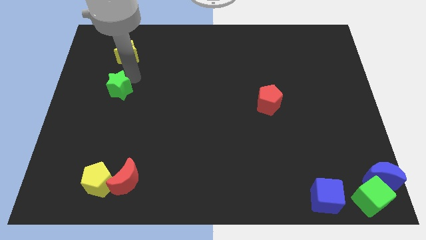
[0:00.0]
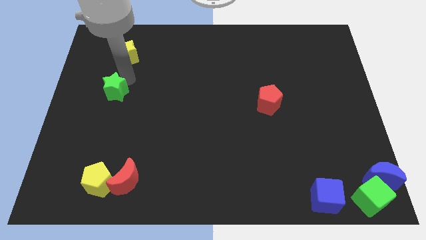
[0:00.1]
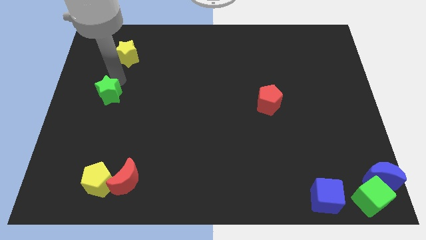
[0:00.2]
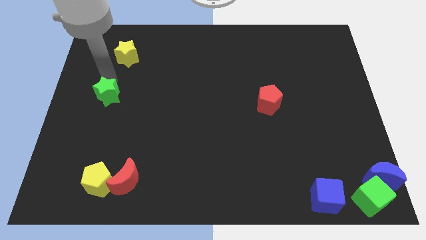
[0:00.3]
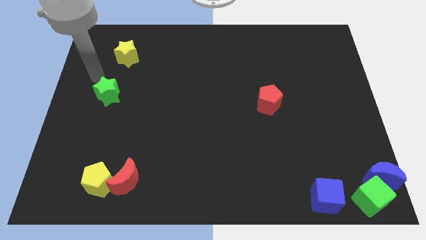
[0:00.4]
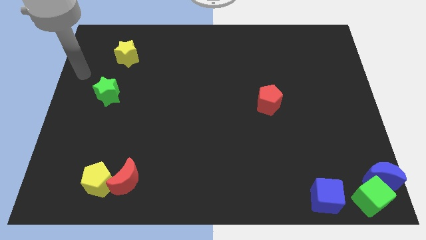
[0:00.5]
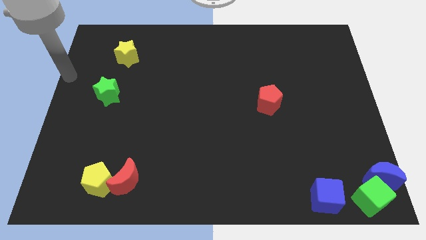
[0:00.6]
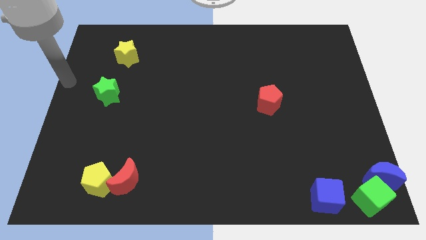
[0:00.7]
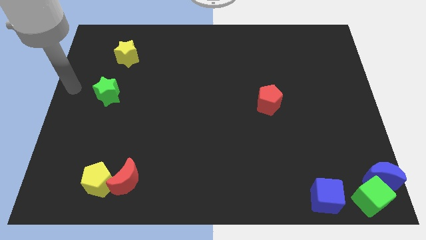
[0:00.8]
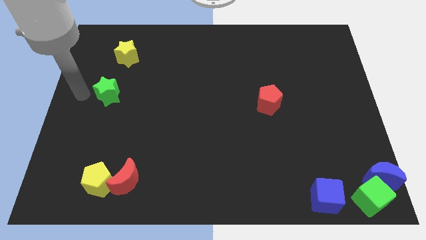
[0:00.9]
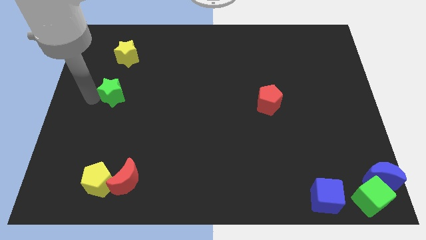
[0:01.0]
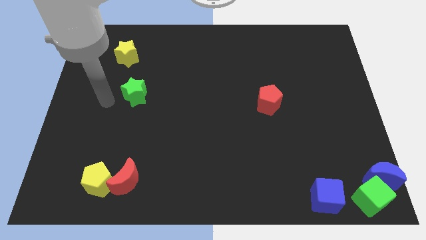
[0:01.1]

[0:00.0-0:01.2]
slightly push the green star to the right

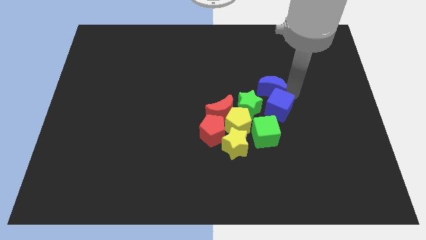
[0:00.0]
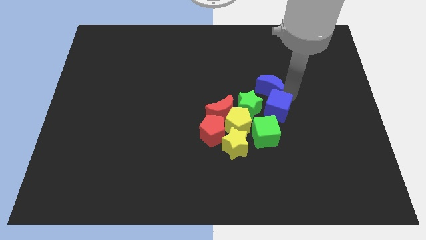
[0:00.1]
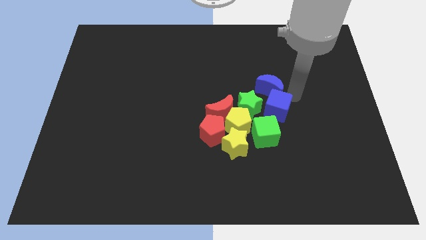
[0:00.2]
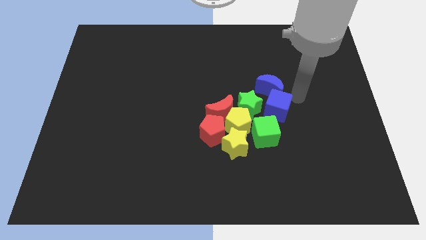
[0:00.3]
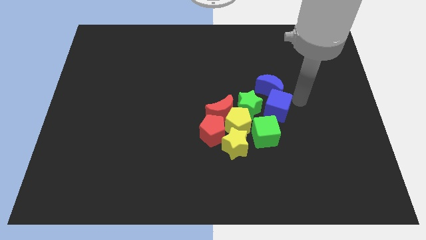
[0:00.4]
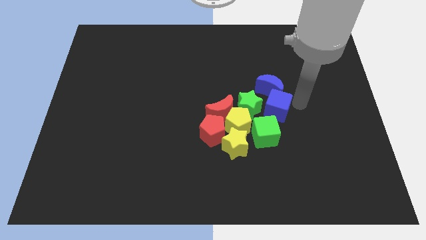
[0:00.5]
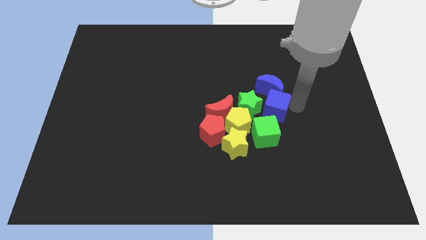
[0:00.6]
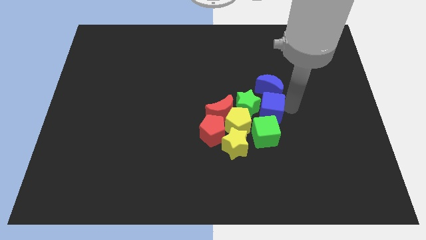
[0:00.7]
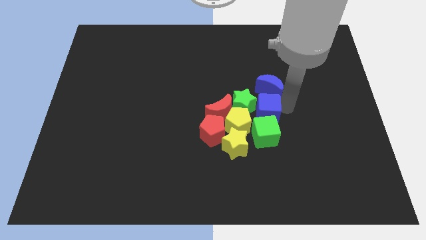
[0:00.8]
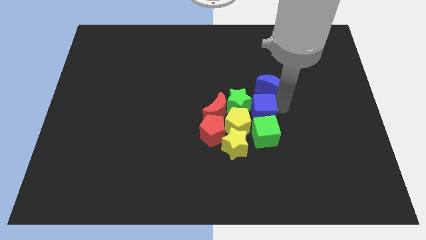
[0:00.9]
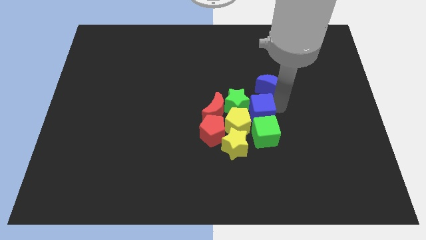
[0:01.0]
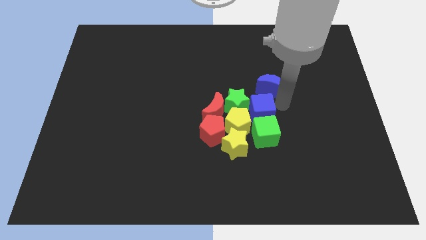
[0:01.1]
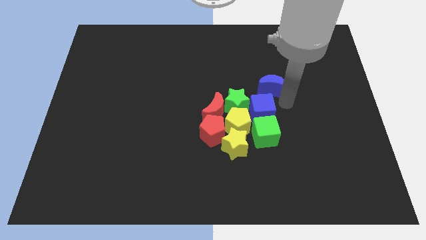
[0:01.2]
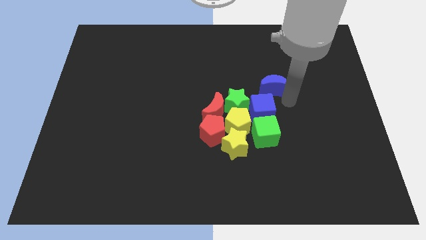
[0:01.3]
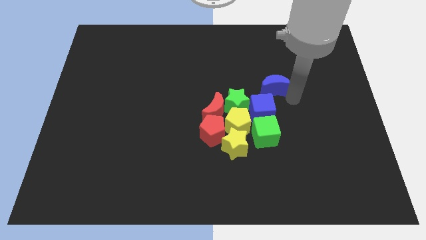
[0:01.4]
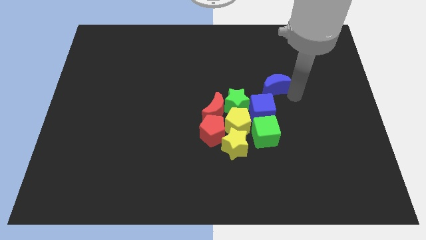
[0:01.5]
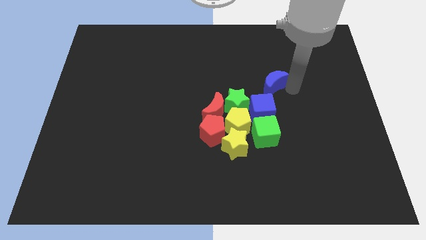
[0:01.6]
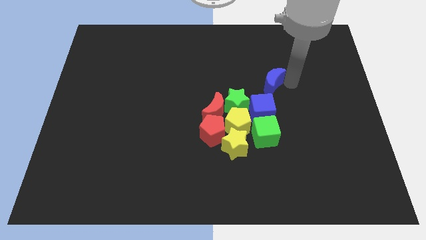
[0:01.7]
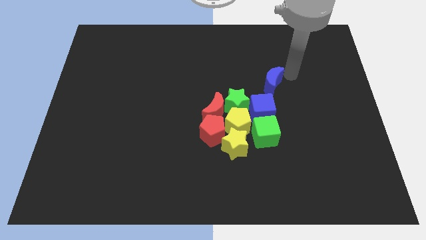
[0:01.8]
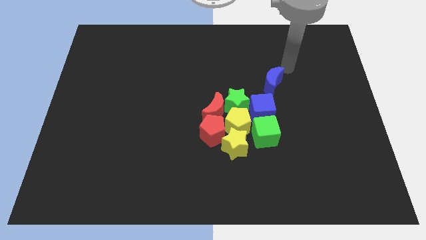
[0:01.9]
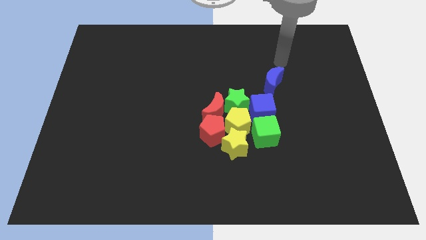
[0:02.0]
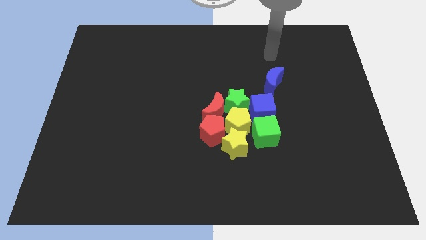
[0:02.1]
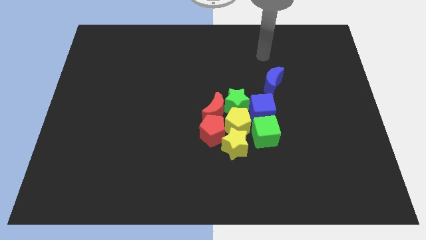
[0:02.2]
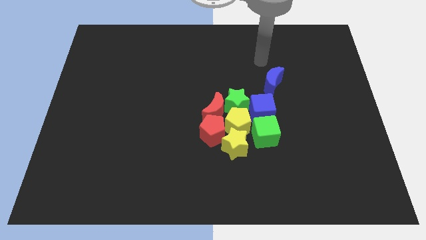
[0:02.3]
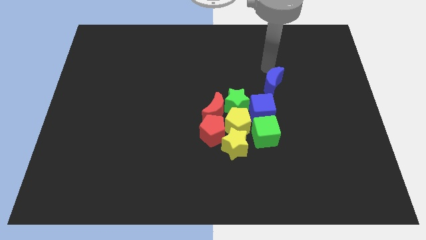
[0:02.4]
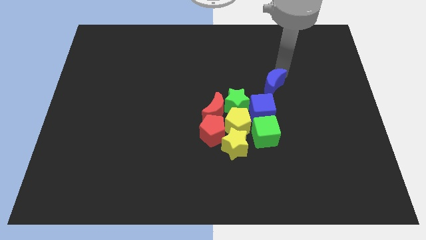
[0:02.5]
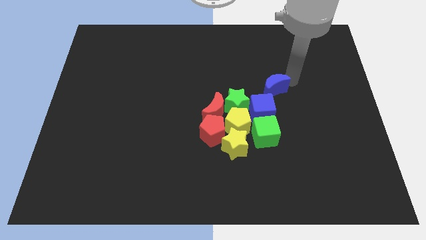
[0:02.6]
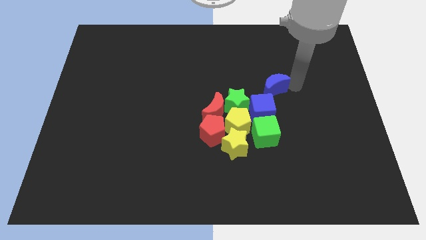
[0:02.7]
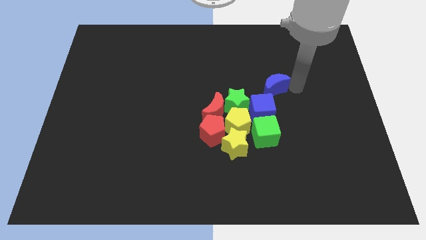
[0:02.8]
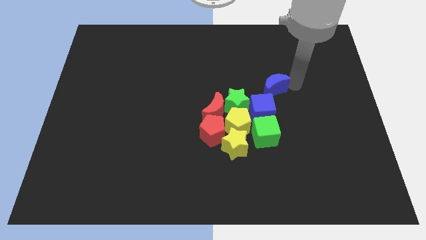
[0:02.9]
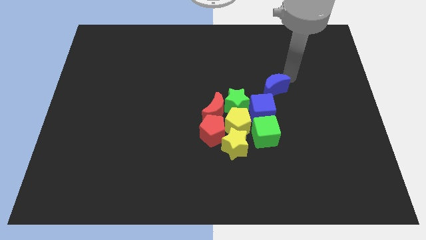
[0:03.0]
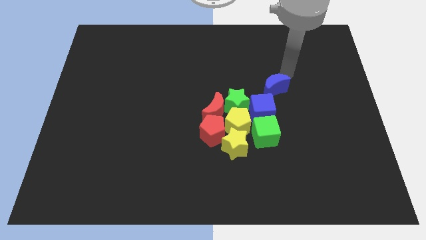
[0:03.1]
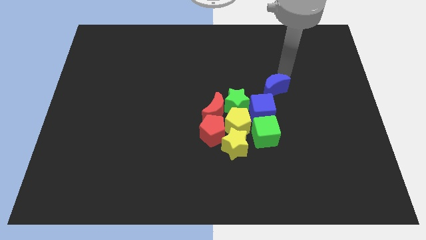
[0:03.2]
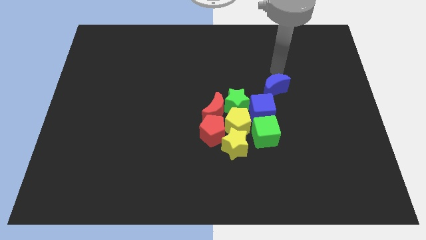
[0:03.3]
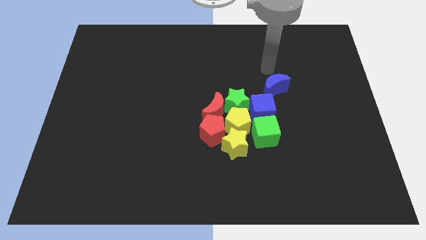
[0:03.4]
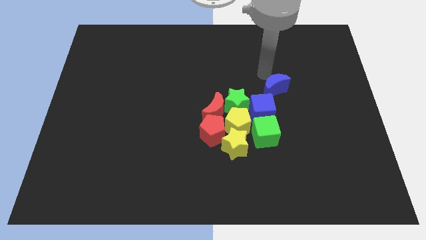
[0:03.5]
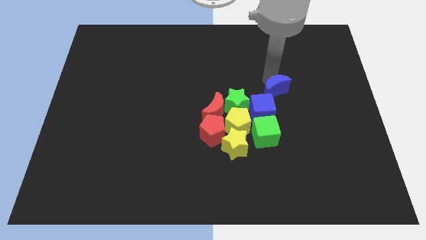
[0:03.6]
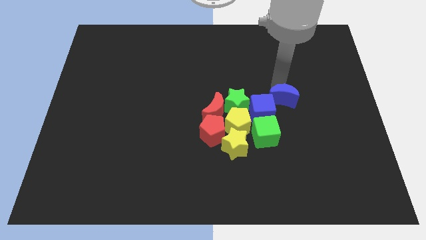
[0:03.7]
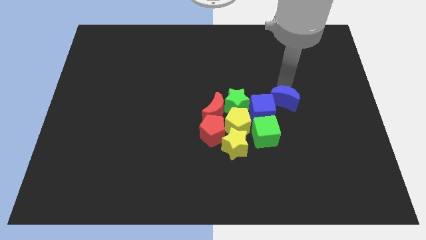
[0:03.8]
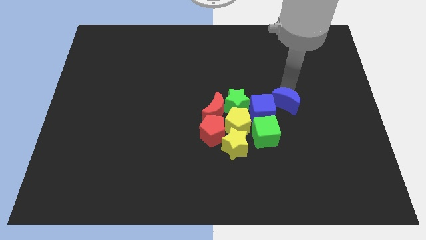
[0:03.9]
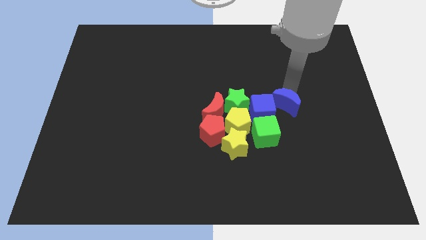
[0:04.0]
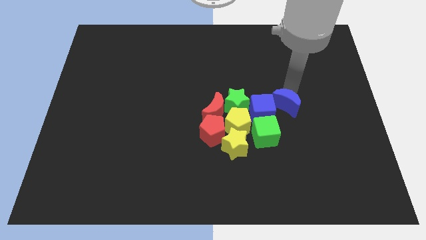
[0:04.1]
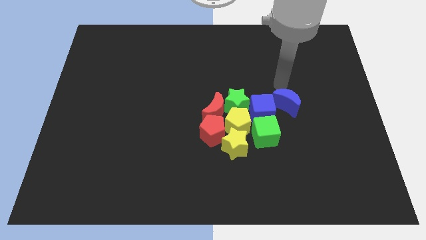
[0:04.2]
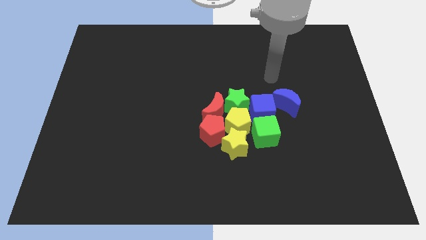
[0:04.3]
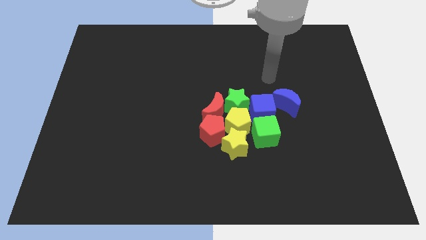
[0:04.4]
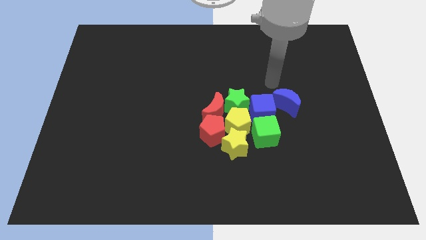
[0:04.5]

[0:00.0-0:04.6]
move the blue cube into the group of blocks

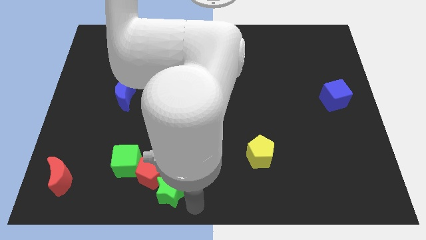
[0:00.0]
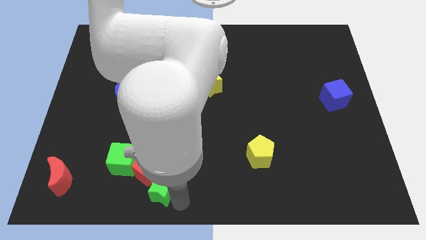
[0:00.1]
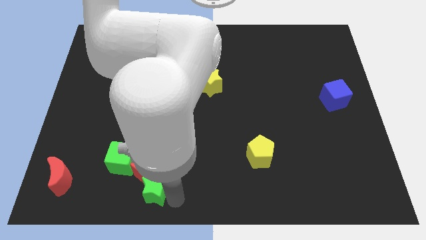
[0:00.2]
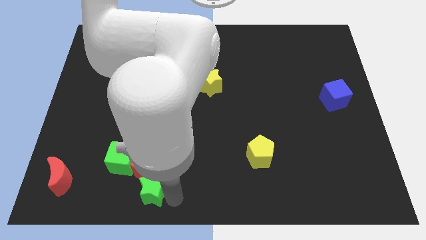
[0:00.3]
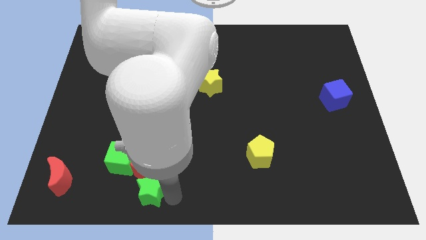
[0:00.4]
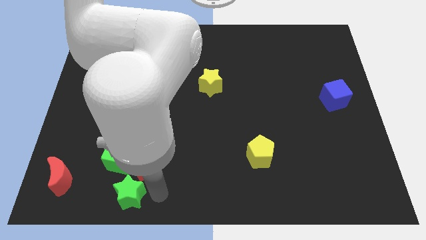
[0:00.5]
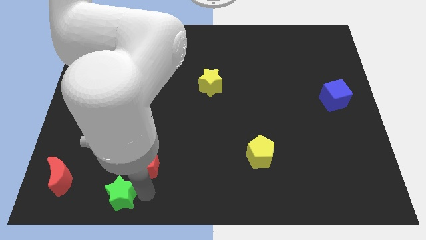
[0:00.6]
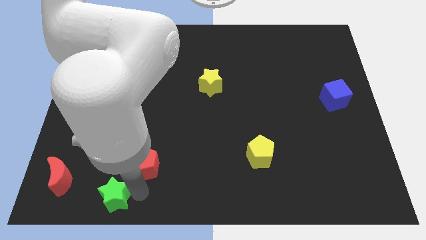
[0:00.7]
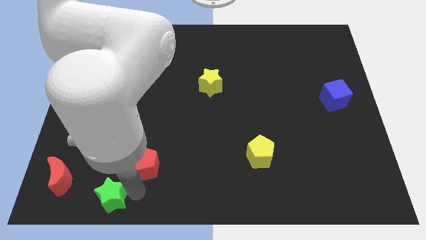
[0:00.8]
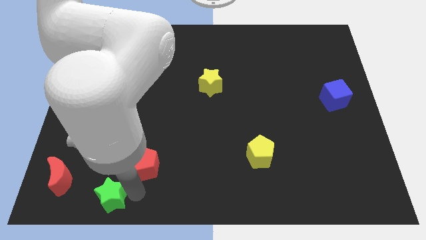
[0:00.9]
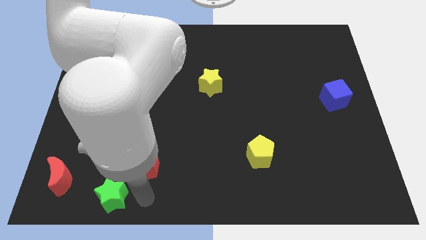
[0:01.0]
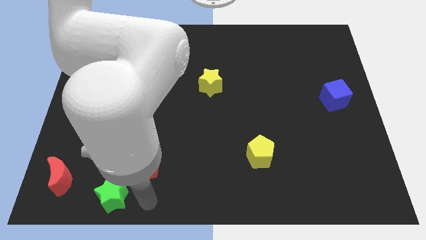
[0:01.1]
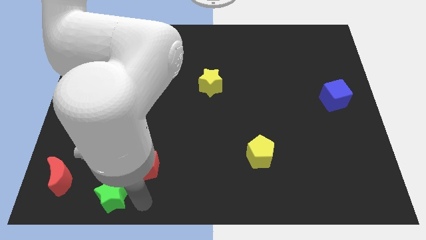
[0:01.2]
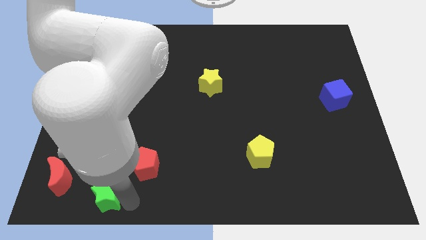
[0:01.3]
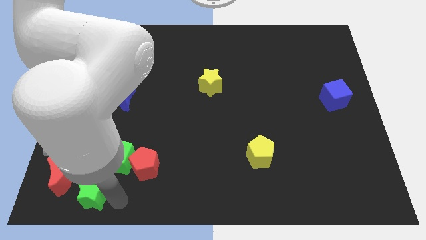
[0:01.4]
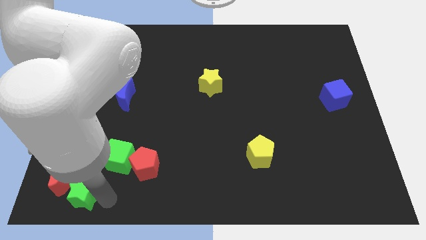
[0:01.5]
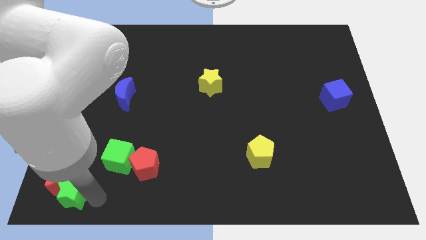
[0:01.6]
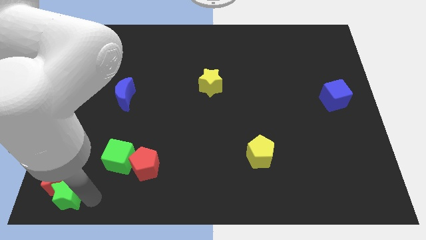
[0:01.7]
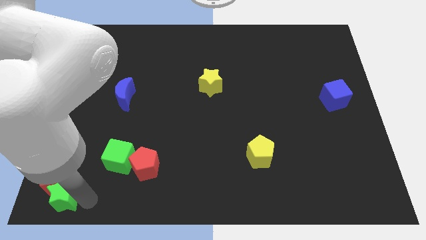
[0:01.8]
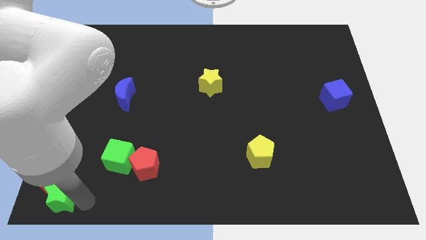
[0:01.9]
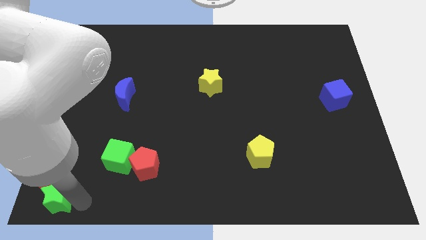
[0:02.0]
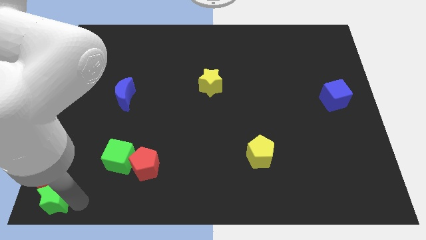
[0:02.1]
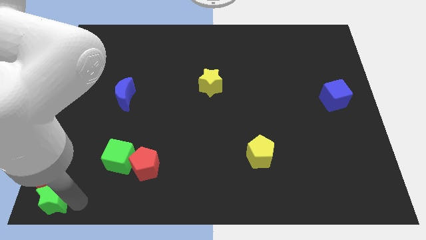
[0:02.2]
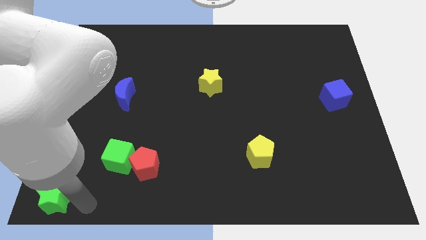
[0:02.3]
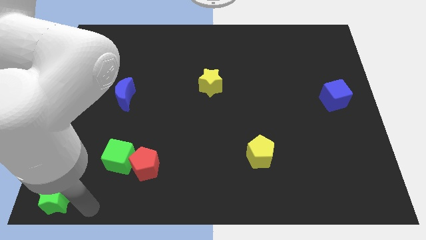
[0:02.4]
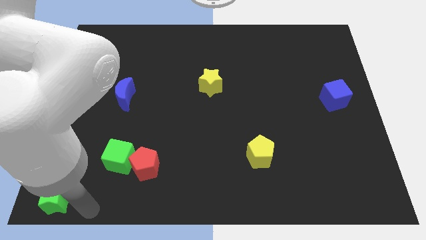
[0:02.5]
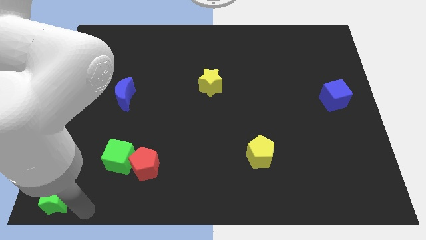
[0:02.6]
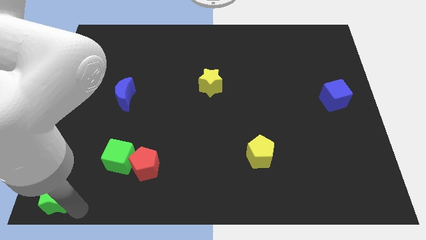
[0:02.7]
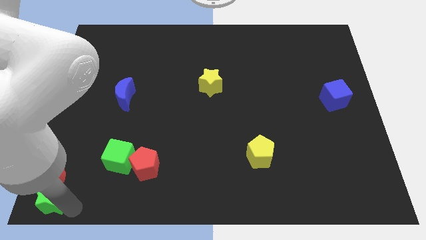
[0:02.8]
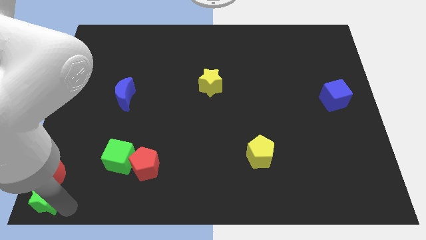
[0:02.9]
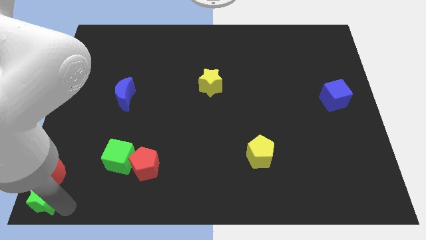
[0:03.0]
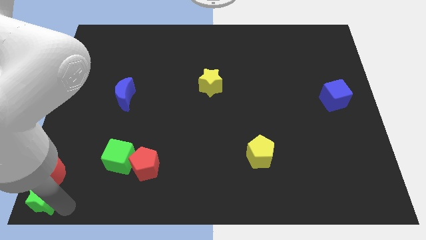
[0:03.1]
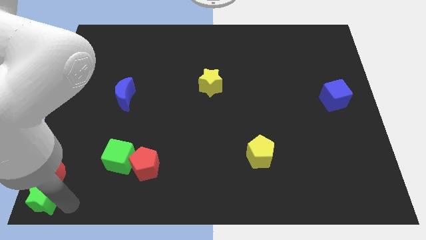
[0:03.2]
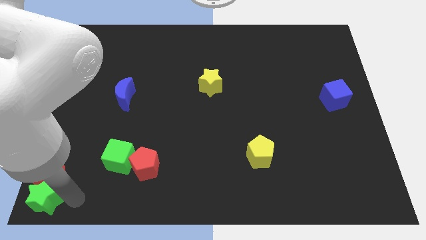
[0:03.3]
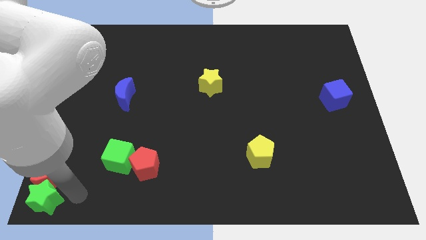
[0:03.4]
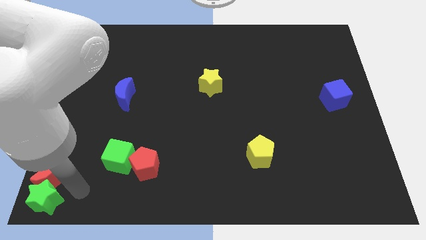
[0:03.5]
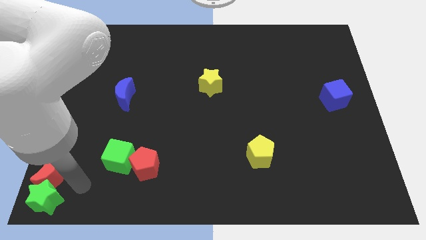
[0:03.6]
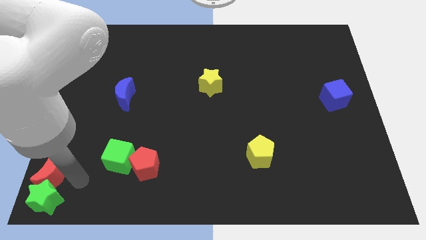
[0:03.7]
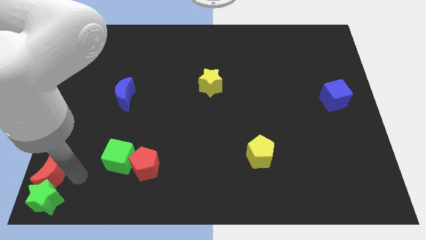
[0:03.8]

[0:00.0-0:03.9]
put the green star at the bottom of the red moon
